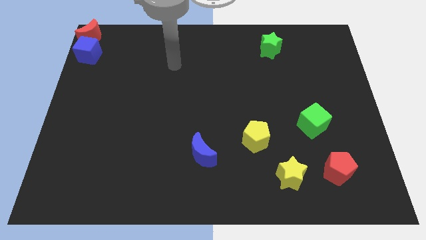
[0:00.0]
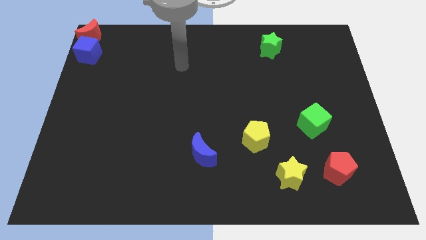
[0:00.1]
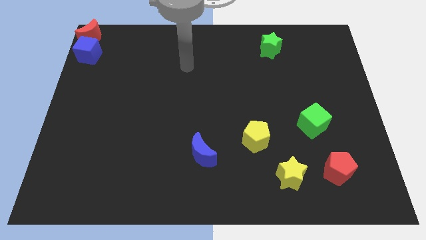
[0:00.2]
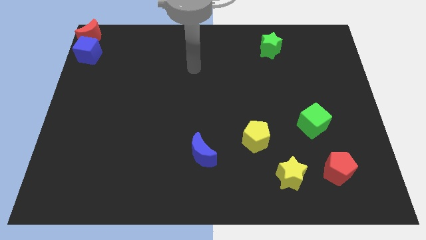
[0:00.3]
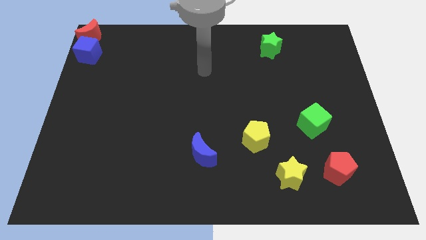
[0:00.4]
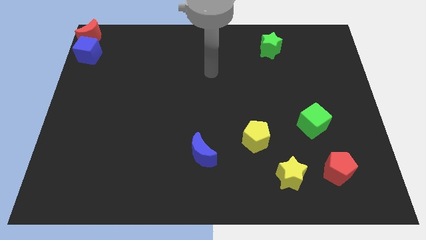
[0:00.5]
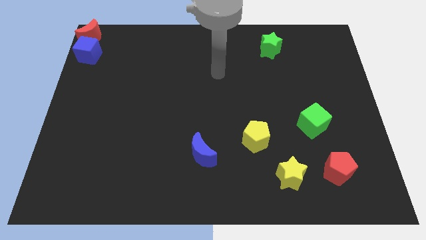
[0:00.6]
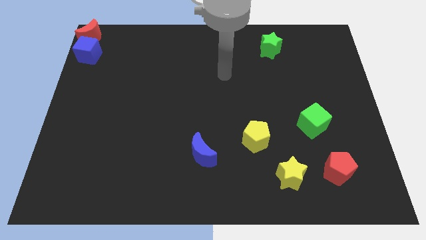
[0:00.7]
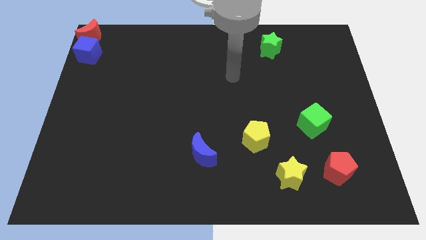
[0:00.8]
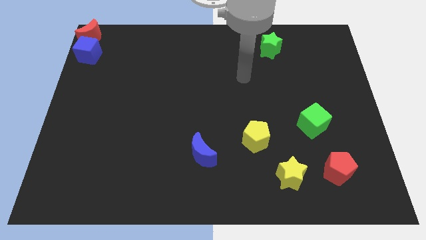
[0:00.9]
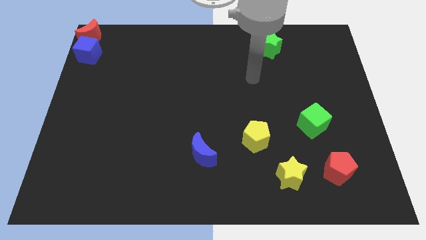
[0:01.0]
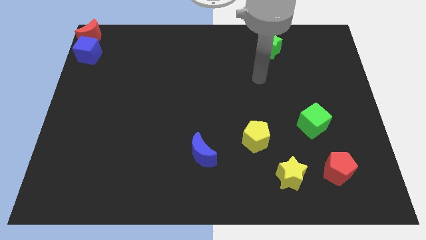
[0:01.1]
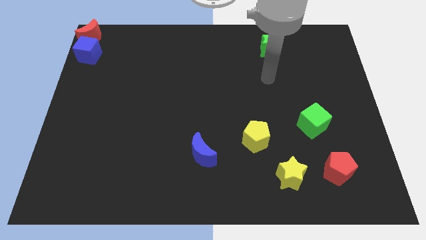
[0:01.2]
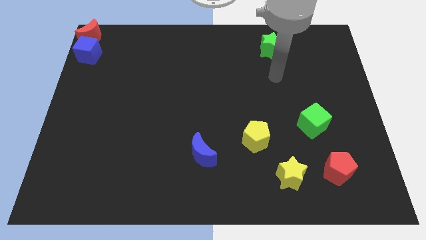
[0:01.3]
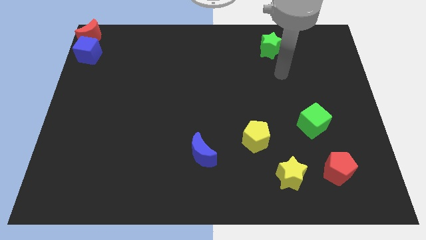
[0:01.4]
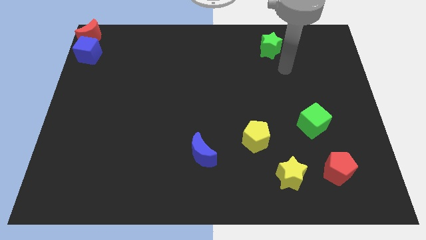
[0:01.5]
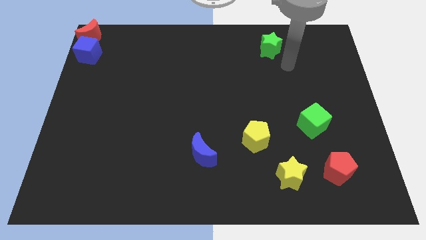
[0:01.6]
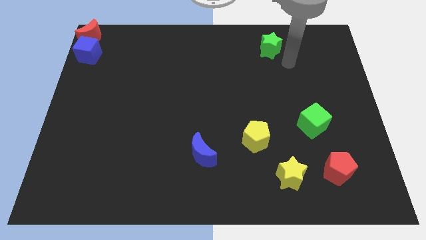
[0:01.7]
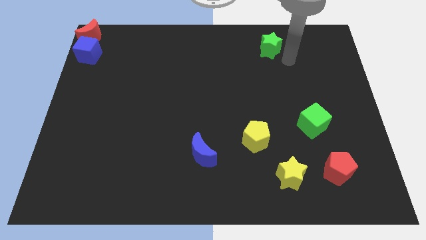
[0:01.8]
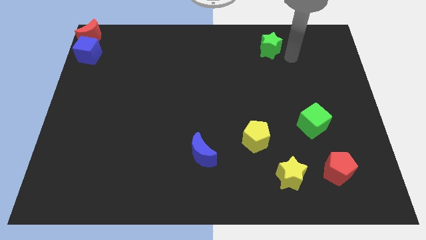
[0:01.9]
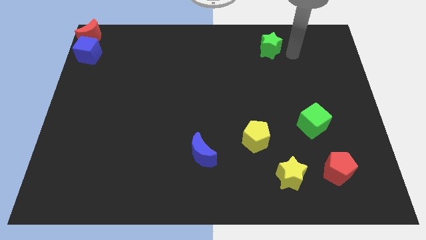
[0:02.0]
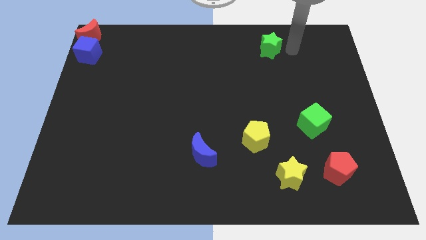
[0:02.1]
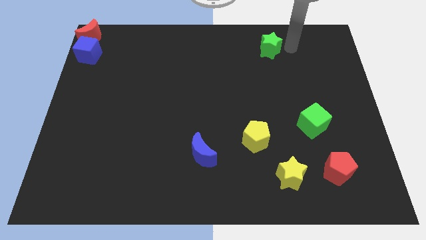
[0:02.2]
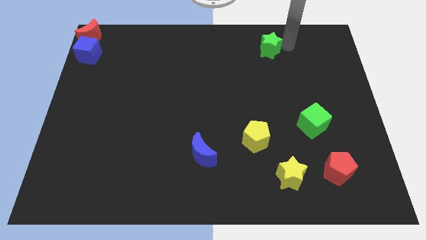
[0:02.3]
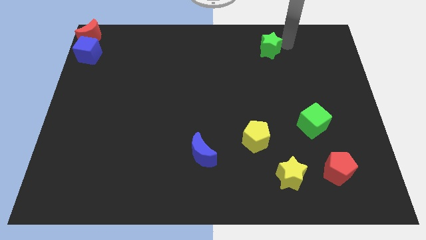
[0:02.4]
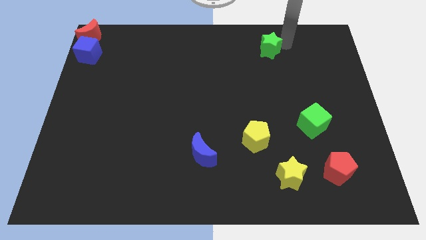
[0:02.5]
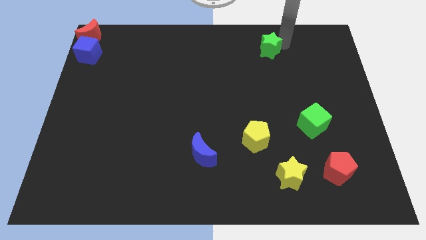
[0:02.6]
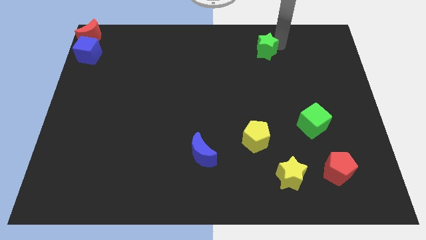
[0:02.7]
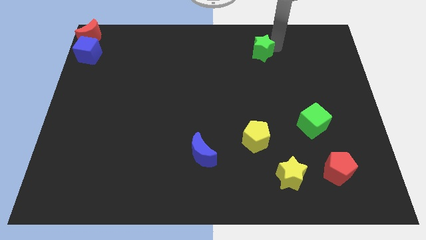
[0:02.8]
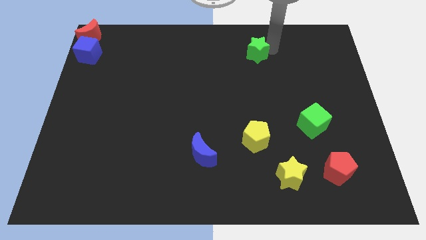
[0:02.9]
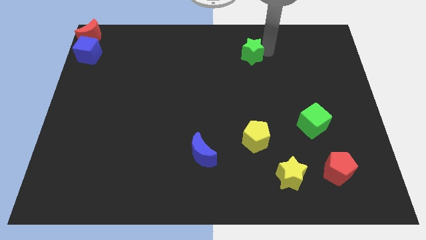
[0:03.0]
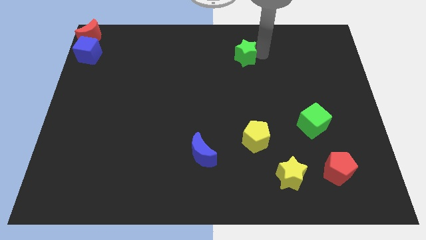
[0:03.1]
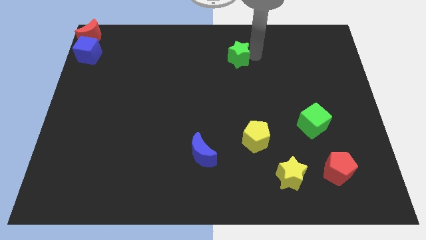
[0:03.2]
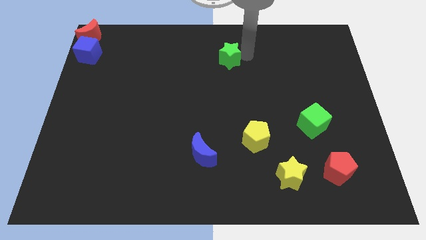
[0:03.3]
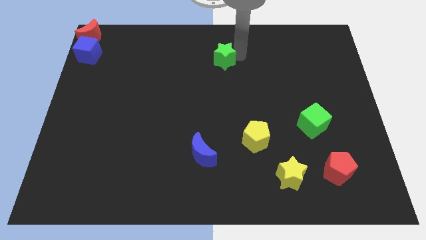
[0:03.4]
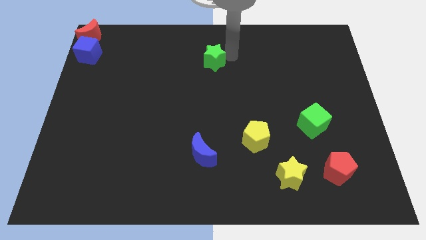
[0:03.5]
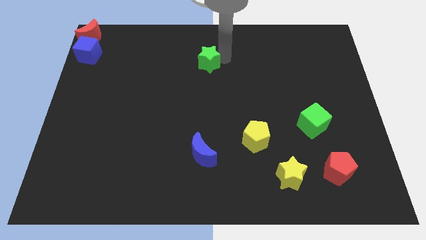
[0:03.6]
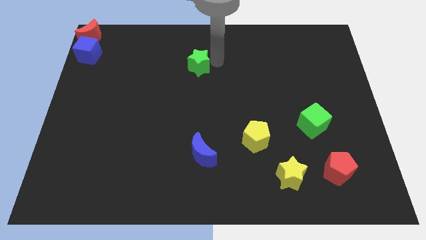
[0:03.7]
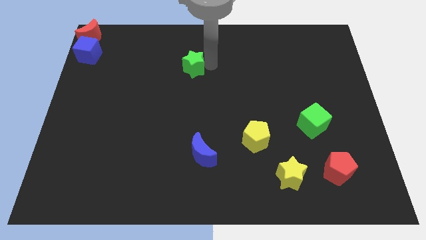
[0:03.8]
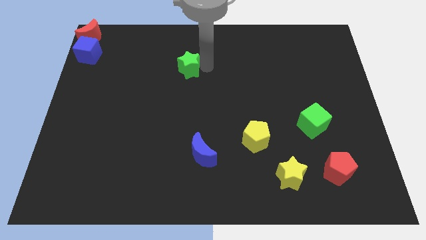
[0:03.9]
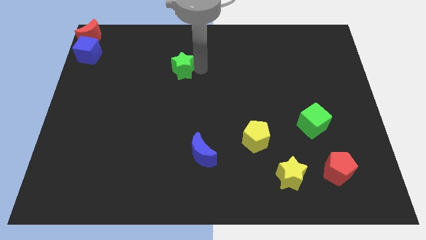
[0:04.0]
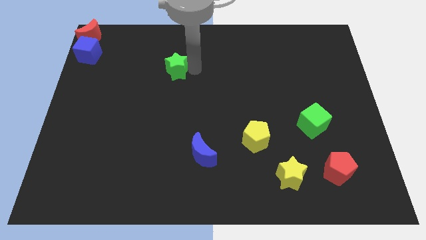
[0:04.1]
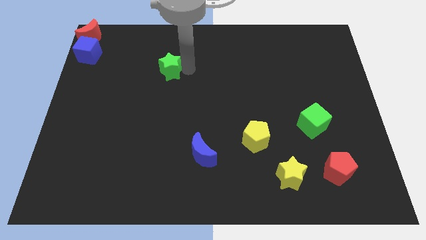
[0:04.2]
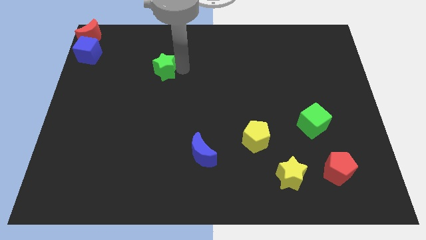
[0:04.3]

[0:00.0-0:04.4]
place the green star above the blue moon

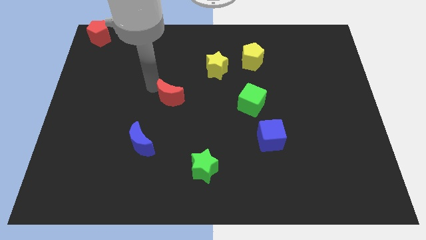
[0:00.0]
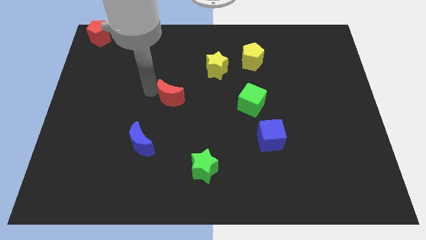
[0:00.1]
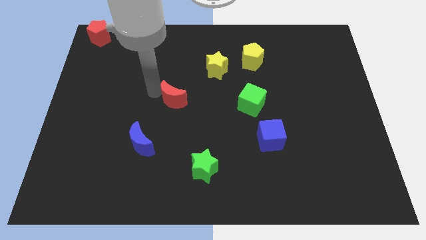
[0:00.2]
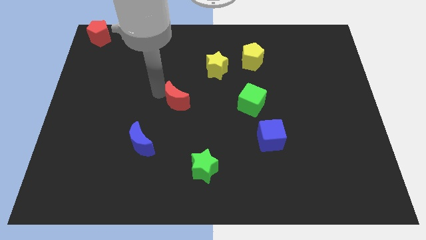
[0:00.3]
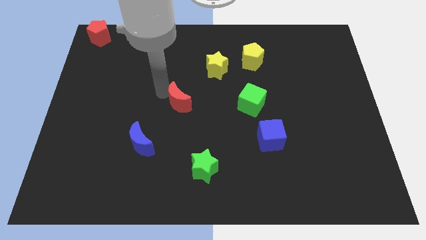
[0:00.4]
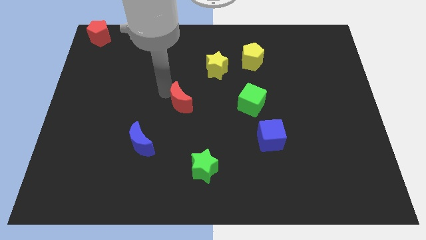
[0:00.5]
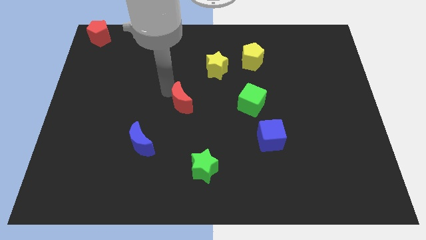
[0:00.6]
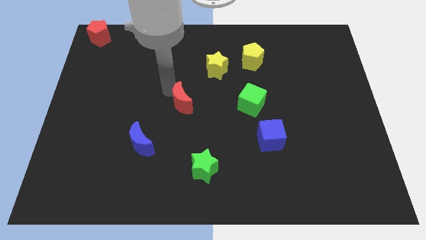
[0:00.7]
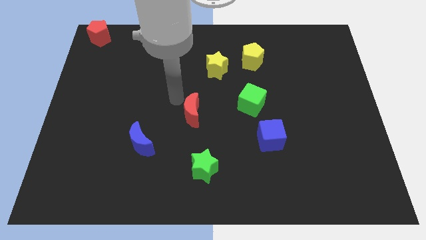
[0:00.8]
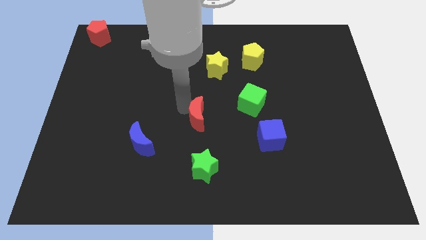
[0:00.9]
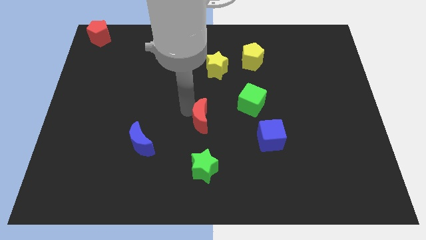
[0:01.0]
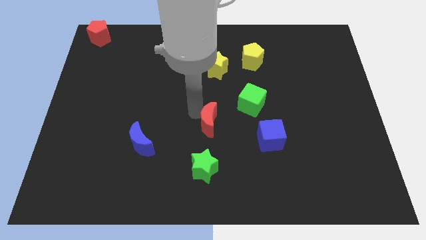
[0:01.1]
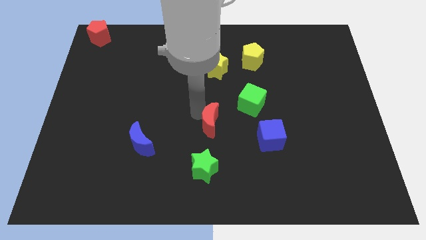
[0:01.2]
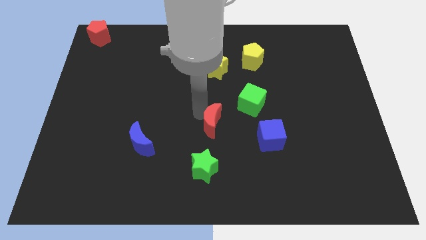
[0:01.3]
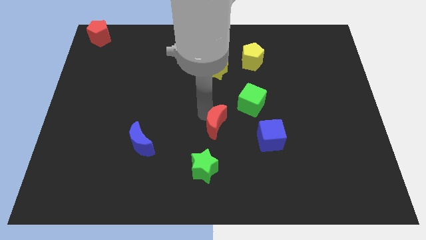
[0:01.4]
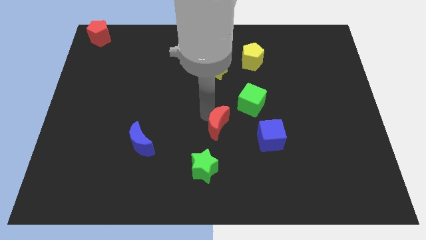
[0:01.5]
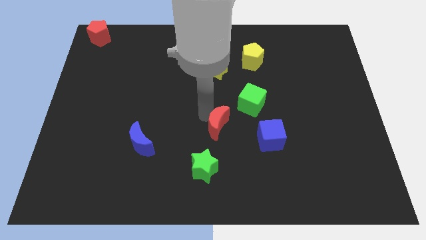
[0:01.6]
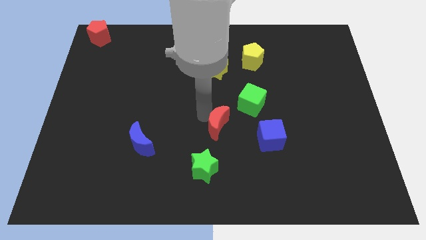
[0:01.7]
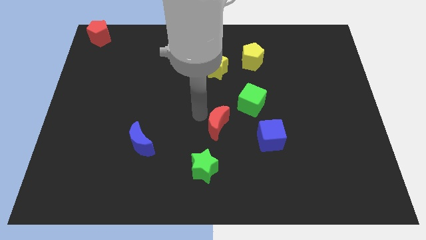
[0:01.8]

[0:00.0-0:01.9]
move the red crescent towards blue cube

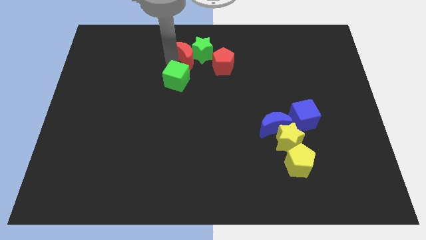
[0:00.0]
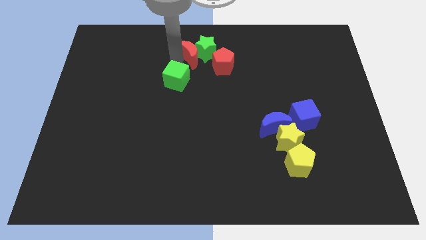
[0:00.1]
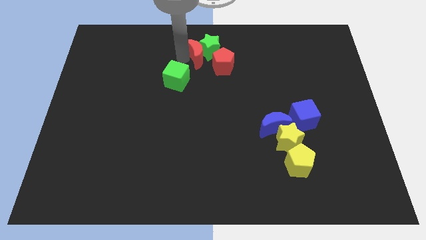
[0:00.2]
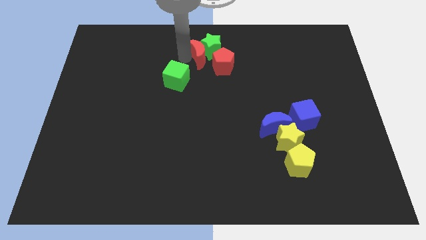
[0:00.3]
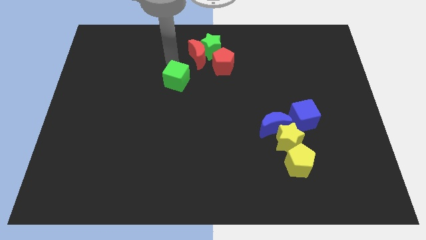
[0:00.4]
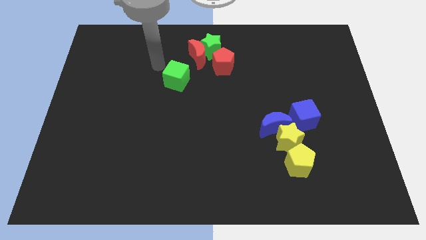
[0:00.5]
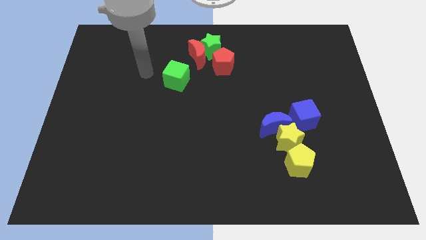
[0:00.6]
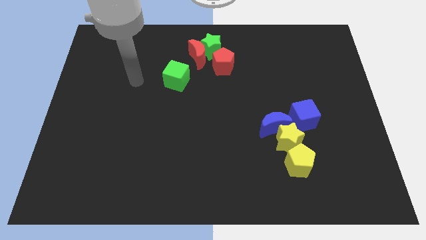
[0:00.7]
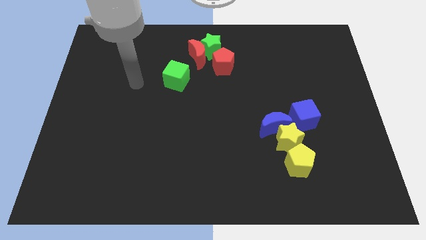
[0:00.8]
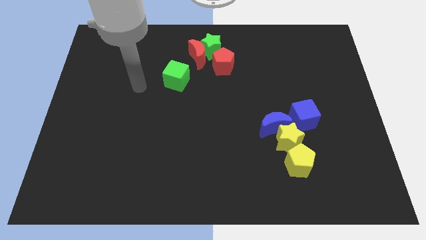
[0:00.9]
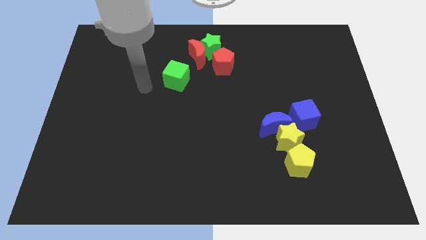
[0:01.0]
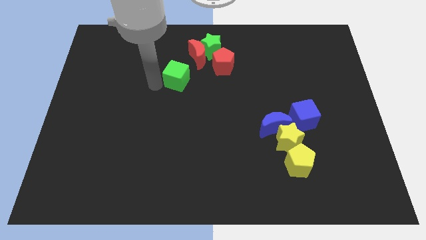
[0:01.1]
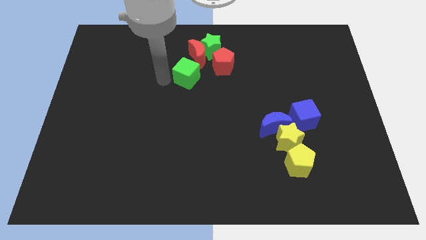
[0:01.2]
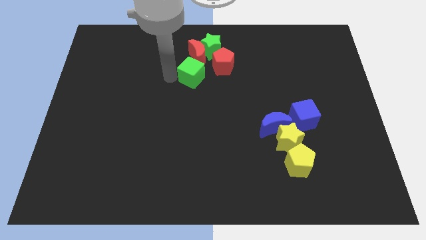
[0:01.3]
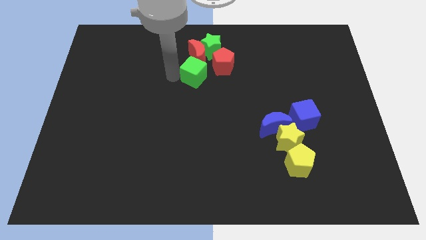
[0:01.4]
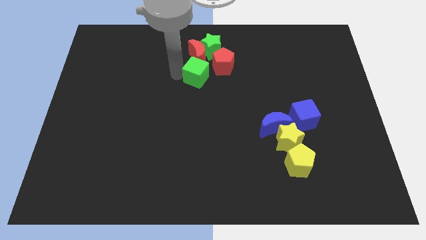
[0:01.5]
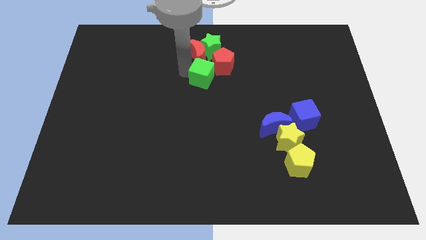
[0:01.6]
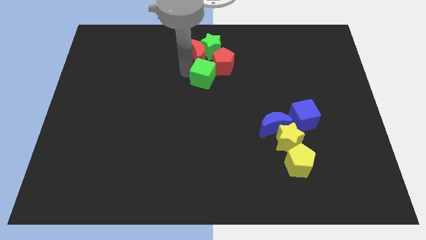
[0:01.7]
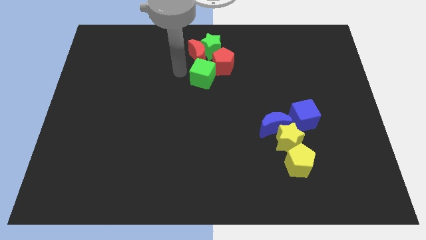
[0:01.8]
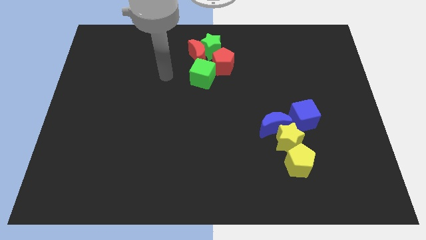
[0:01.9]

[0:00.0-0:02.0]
push the red moon and green cube into the red and green blocks

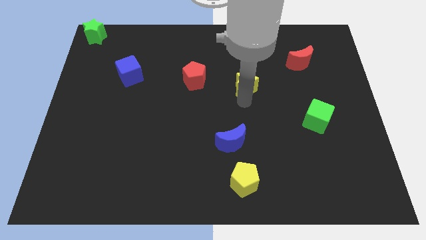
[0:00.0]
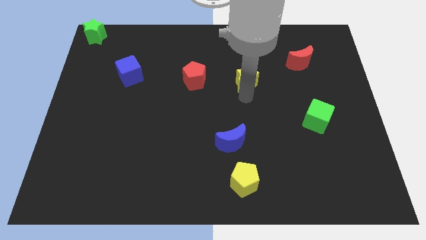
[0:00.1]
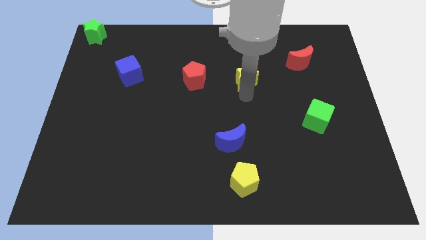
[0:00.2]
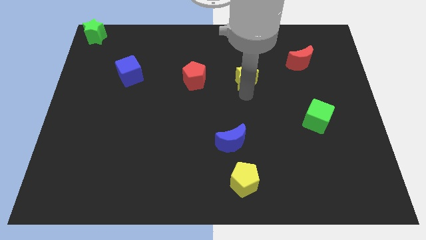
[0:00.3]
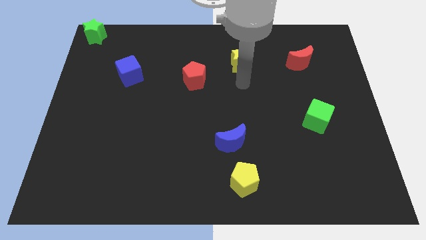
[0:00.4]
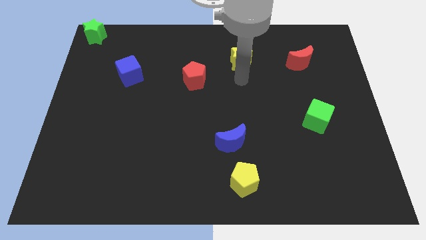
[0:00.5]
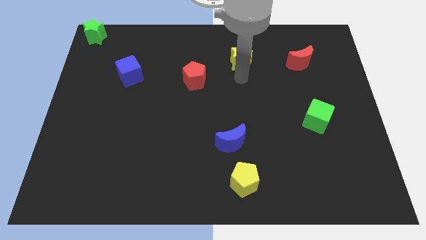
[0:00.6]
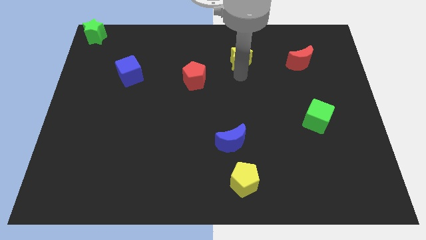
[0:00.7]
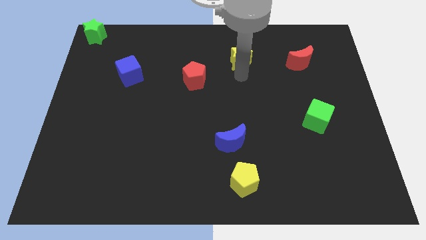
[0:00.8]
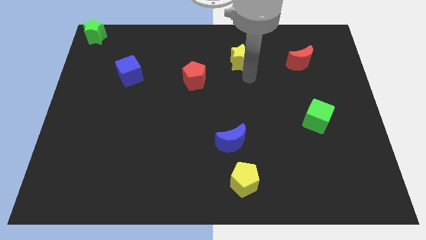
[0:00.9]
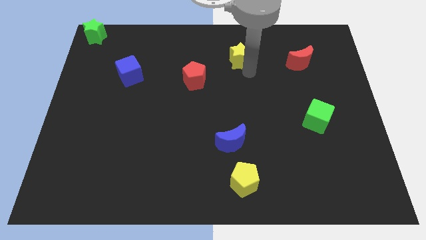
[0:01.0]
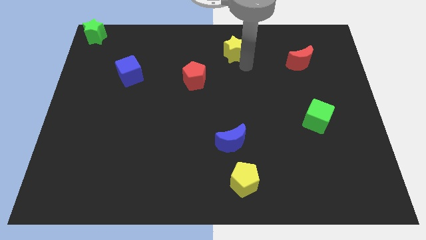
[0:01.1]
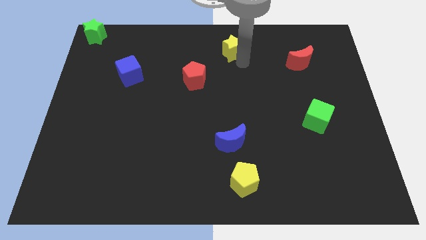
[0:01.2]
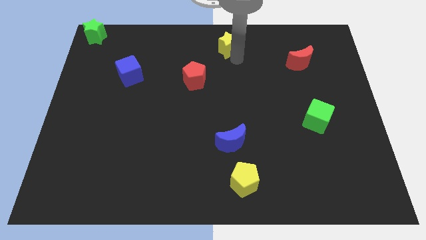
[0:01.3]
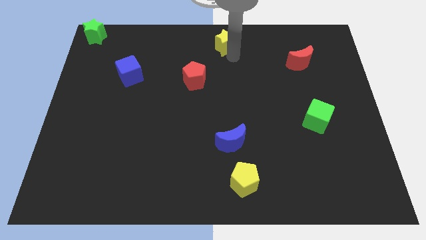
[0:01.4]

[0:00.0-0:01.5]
place the yellow star vertically at the top of the blue crescent
